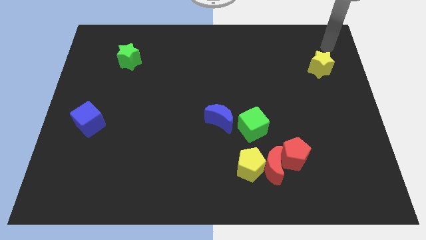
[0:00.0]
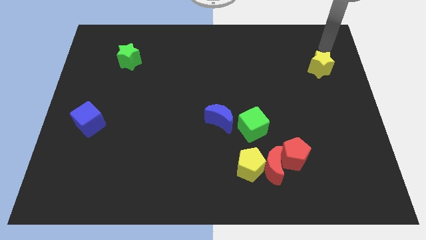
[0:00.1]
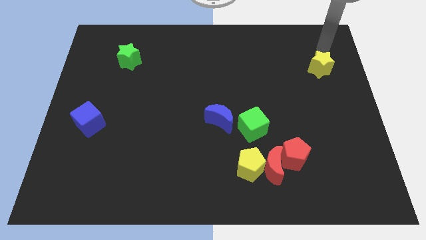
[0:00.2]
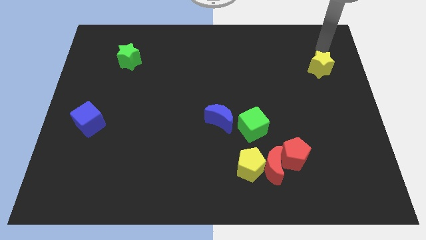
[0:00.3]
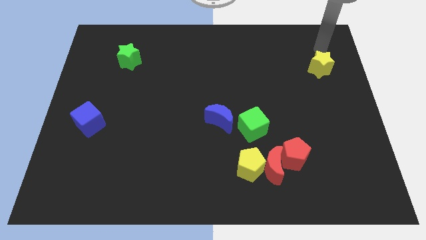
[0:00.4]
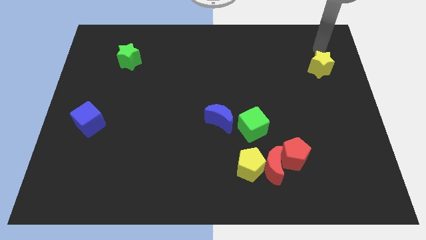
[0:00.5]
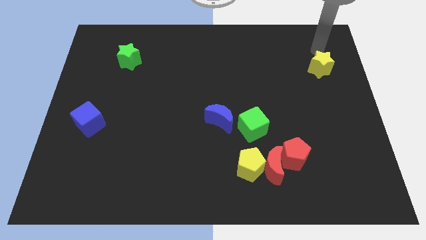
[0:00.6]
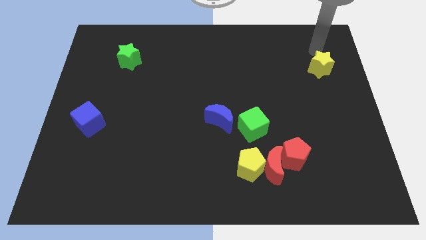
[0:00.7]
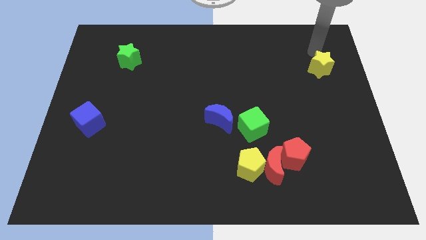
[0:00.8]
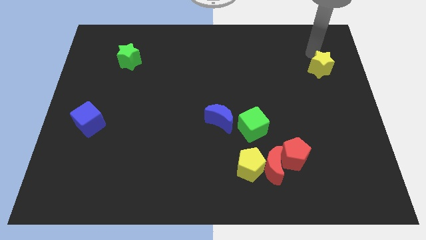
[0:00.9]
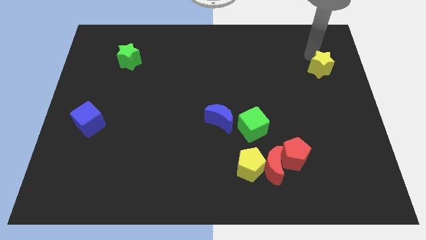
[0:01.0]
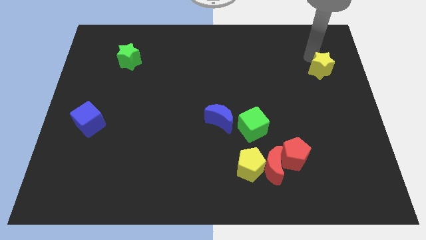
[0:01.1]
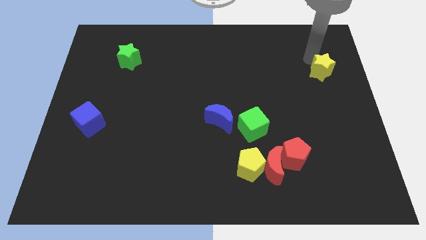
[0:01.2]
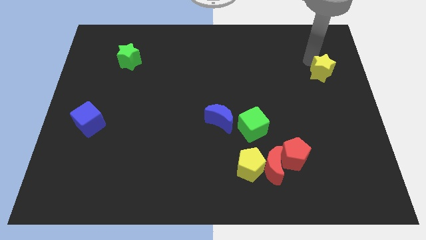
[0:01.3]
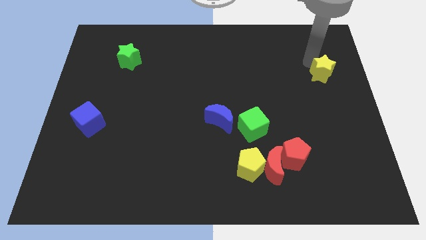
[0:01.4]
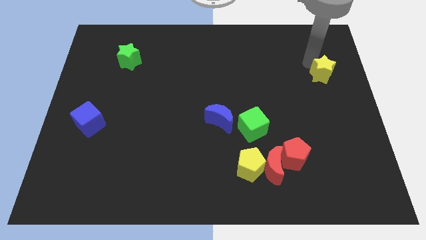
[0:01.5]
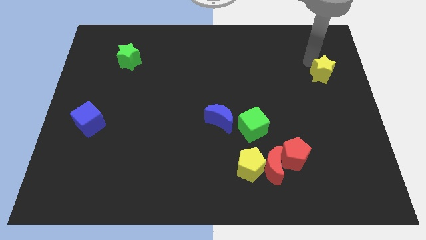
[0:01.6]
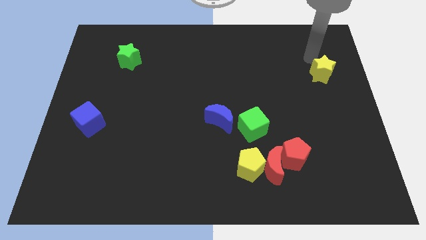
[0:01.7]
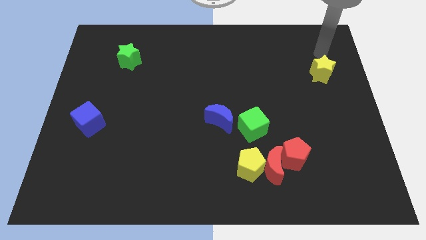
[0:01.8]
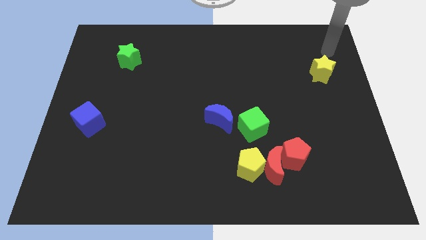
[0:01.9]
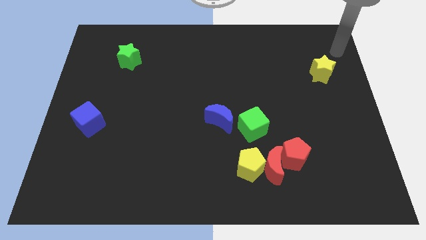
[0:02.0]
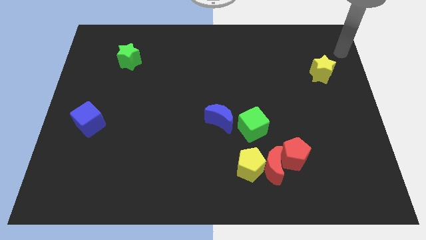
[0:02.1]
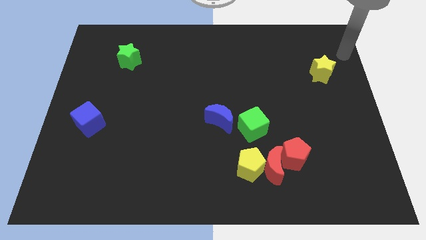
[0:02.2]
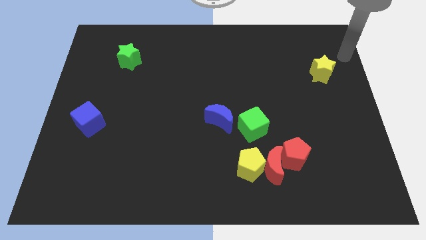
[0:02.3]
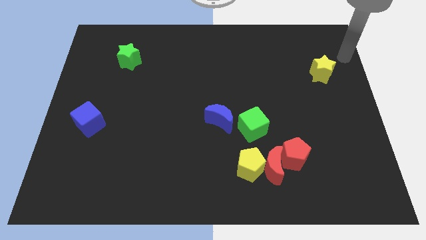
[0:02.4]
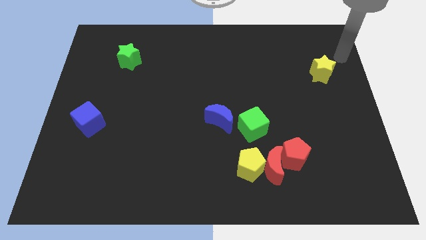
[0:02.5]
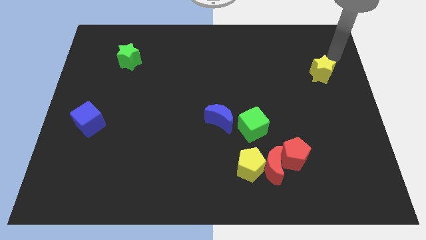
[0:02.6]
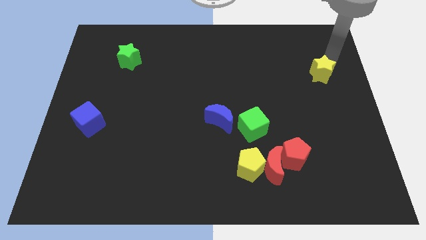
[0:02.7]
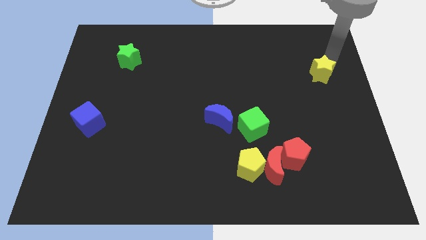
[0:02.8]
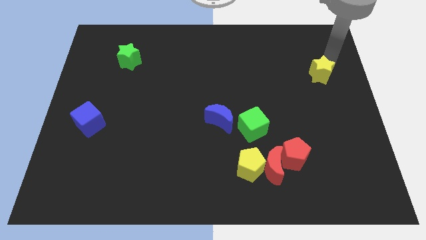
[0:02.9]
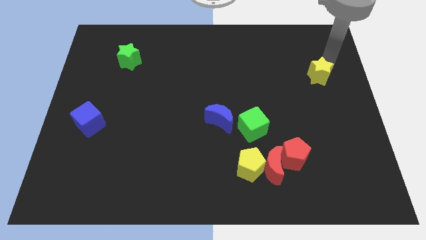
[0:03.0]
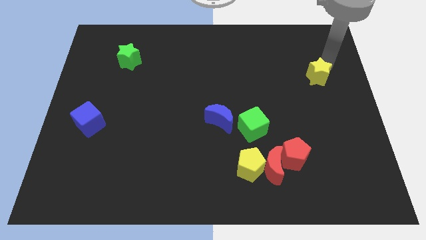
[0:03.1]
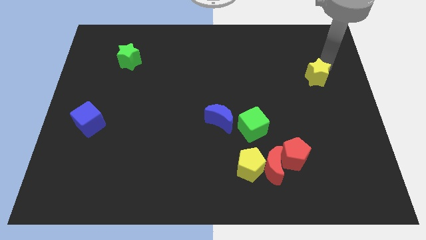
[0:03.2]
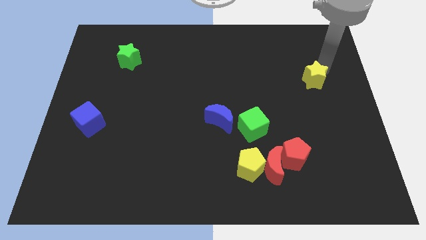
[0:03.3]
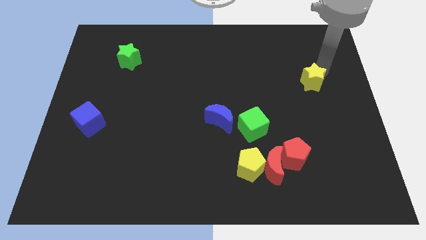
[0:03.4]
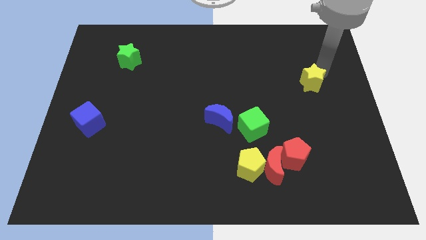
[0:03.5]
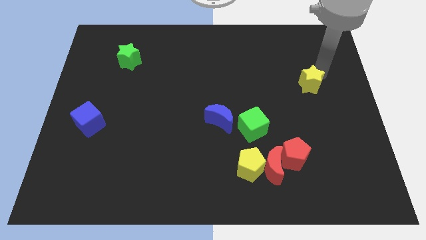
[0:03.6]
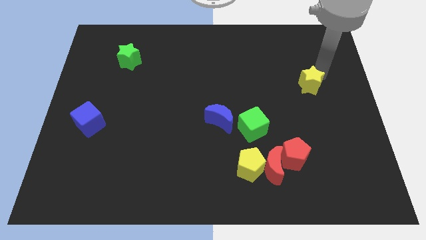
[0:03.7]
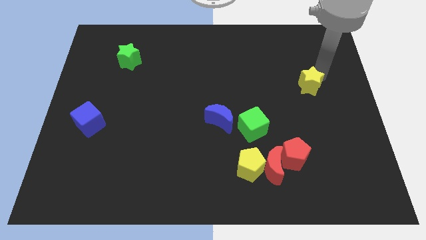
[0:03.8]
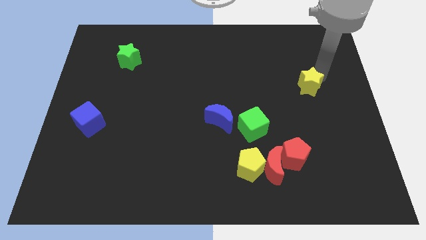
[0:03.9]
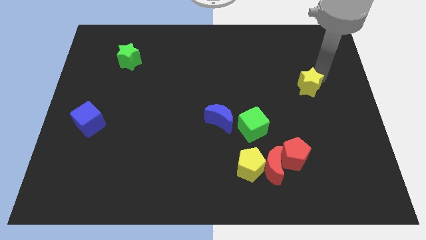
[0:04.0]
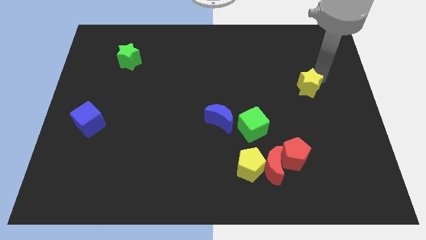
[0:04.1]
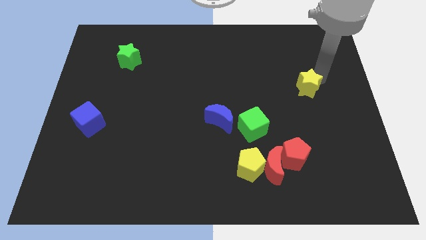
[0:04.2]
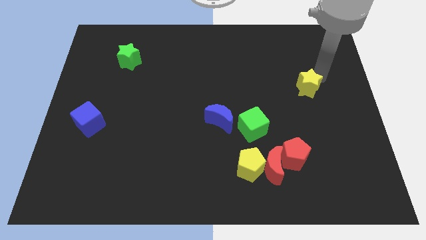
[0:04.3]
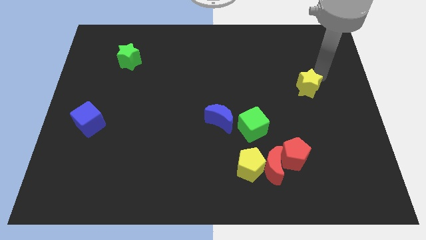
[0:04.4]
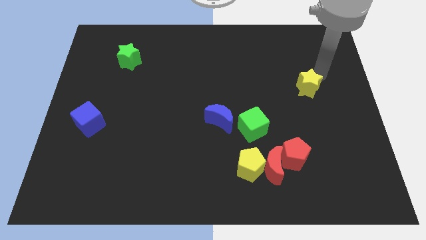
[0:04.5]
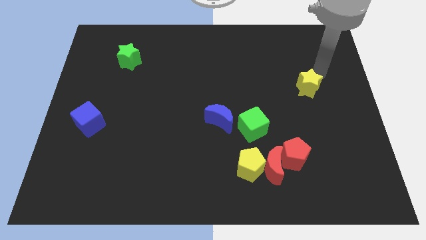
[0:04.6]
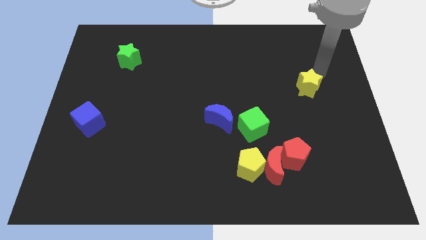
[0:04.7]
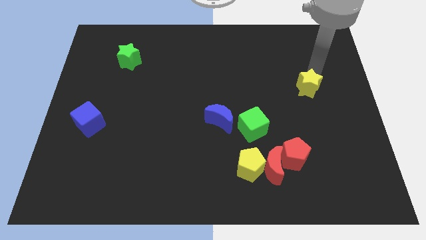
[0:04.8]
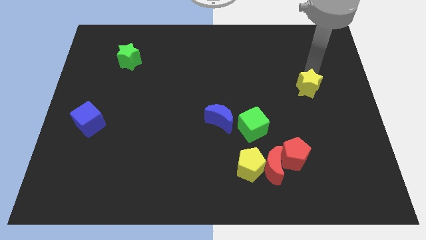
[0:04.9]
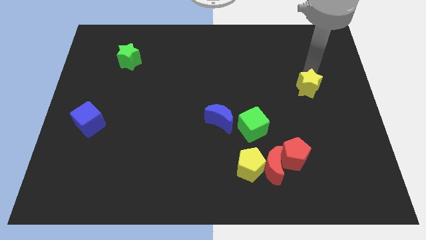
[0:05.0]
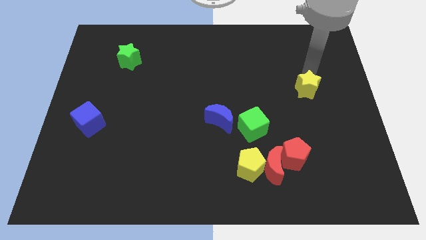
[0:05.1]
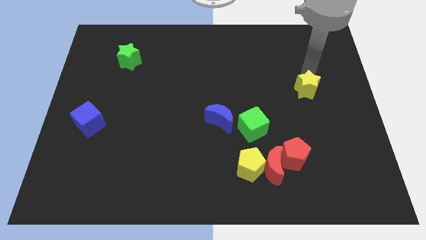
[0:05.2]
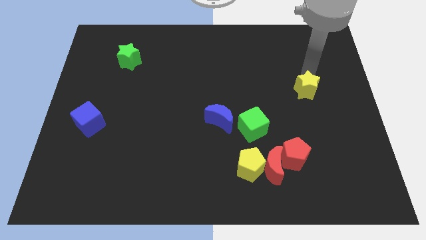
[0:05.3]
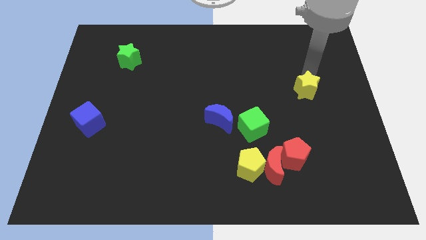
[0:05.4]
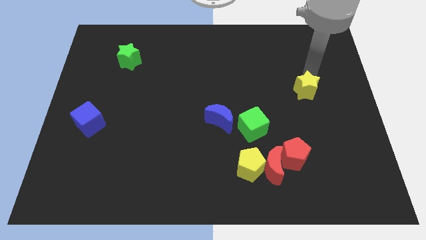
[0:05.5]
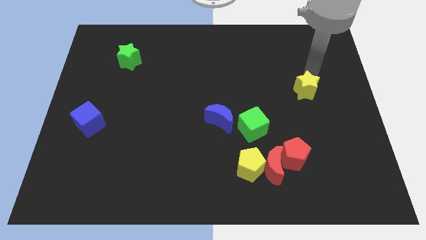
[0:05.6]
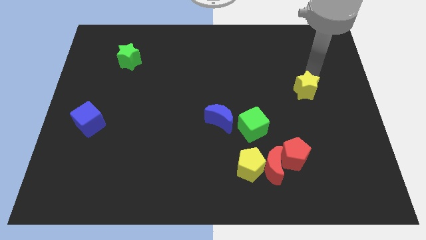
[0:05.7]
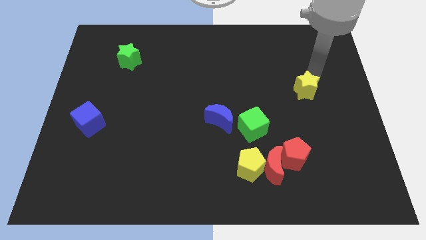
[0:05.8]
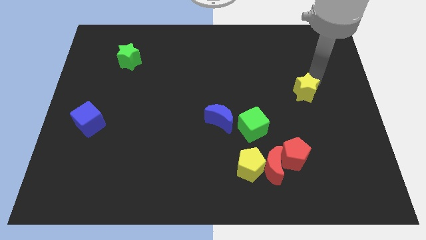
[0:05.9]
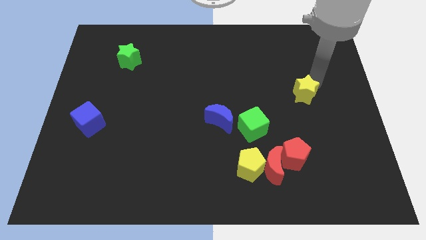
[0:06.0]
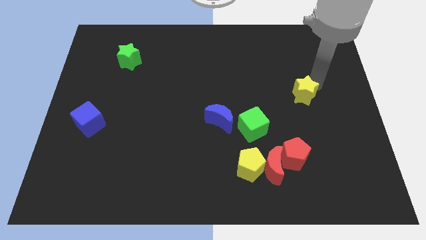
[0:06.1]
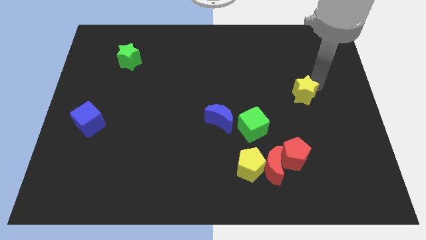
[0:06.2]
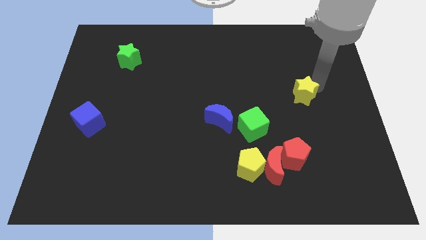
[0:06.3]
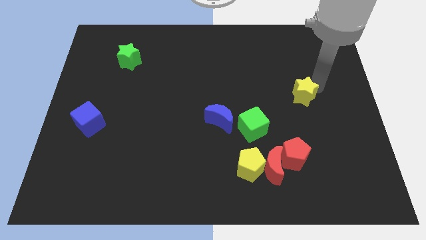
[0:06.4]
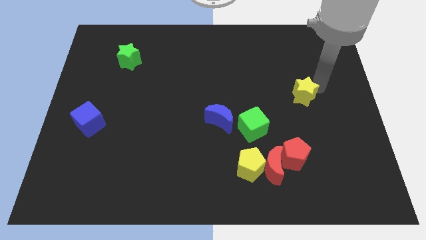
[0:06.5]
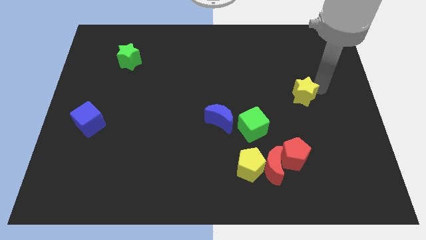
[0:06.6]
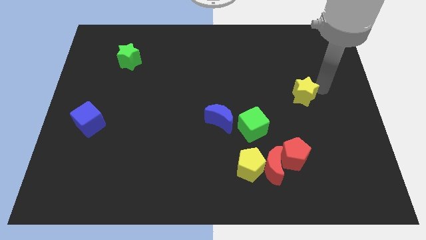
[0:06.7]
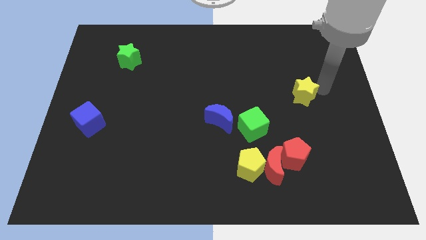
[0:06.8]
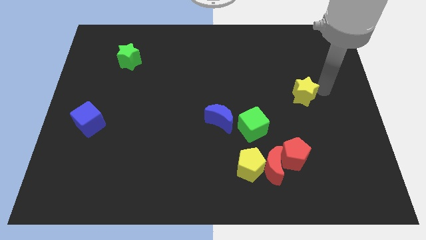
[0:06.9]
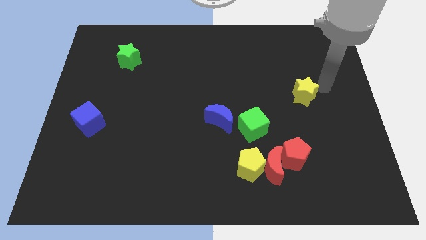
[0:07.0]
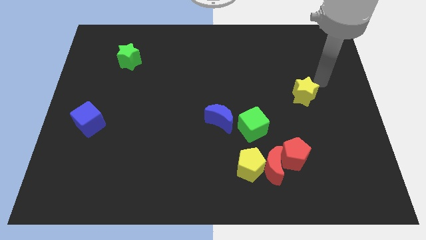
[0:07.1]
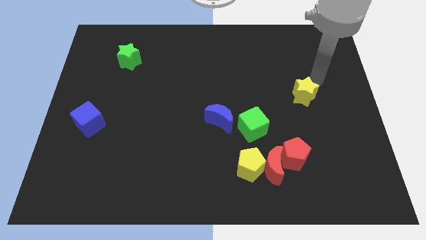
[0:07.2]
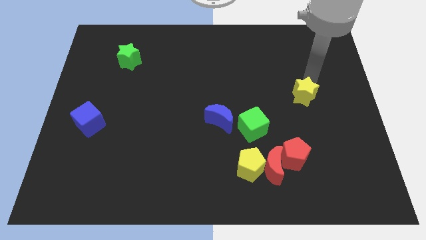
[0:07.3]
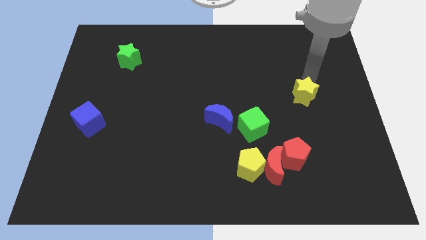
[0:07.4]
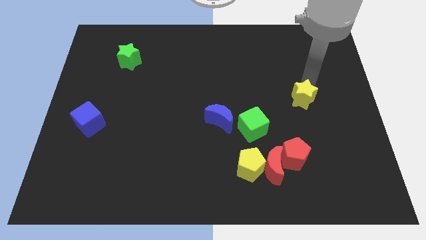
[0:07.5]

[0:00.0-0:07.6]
place the yellow star to the right top of the green cube

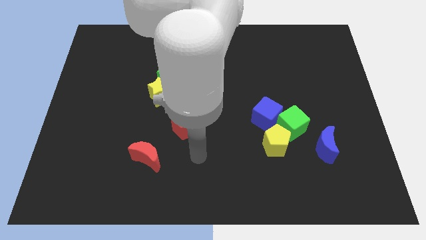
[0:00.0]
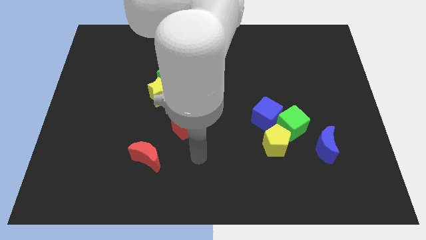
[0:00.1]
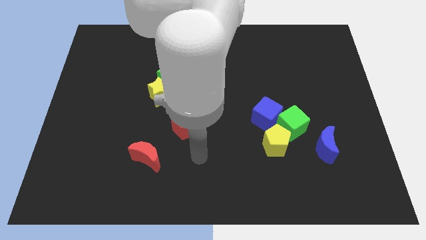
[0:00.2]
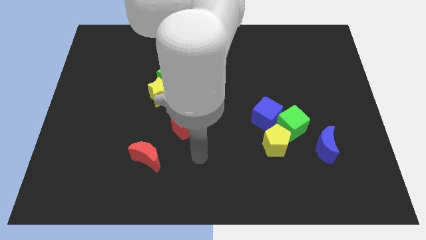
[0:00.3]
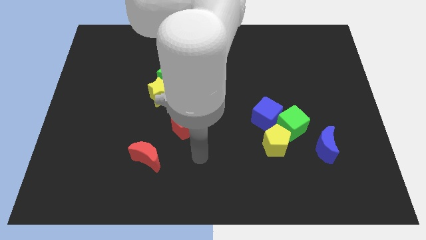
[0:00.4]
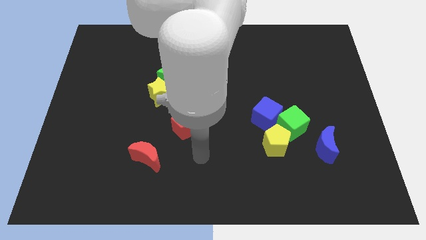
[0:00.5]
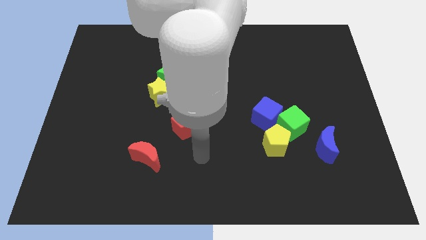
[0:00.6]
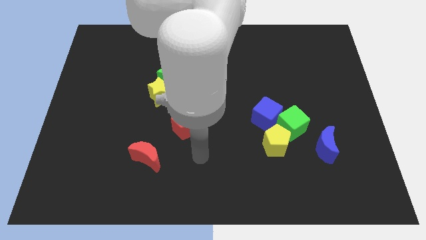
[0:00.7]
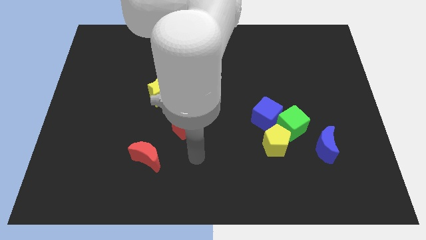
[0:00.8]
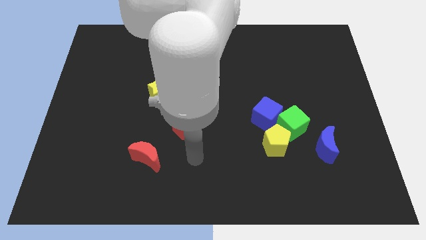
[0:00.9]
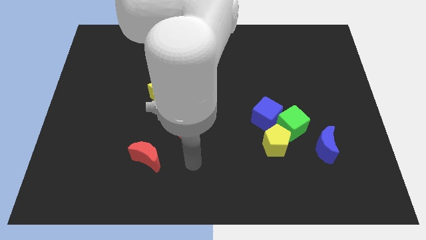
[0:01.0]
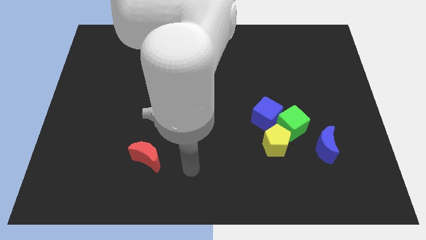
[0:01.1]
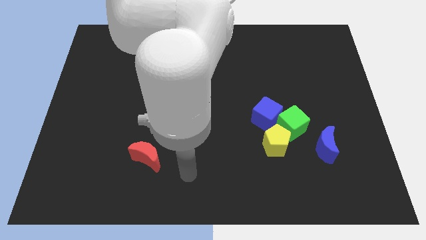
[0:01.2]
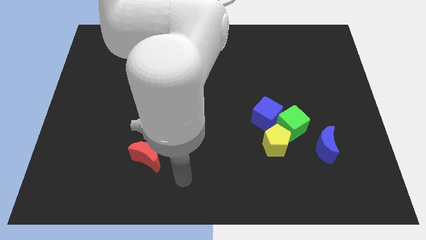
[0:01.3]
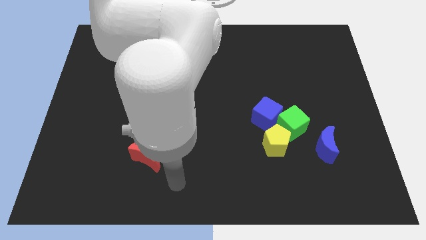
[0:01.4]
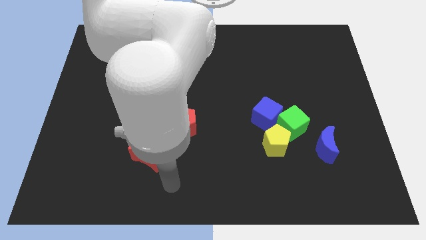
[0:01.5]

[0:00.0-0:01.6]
go close to the bottom right side of the red moon
